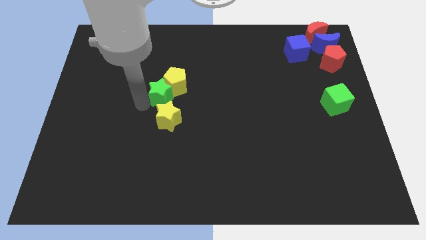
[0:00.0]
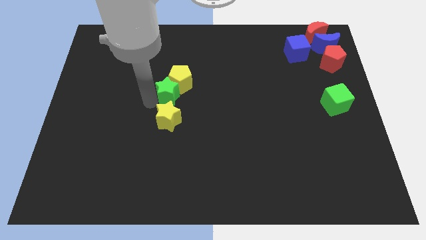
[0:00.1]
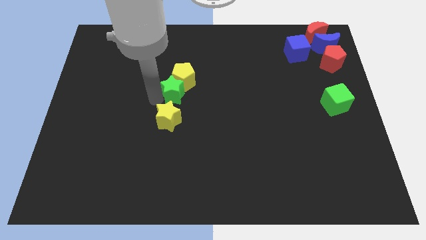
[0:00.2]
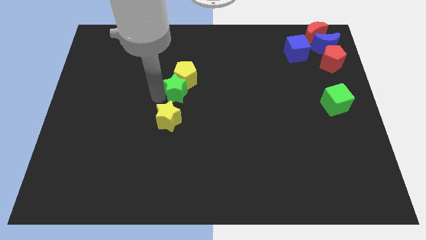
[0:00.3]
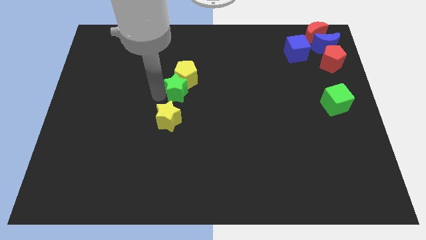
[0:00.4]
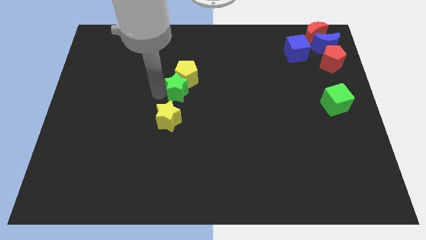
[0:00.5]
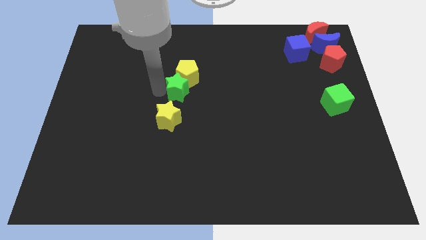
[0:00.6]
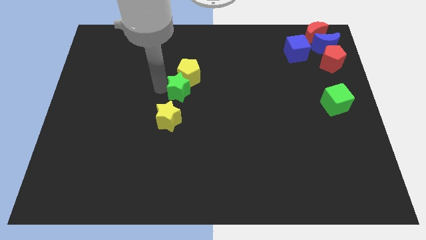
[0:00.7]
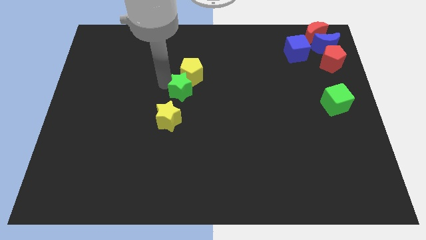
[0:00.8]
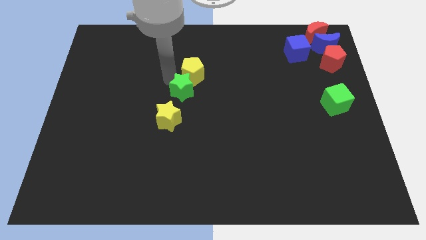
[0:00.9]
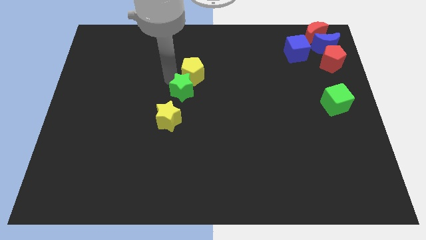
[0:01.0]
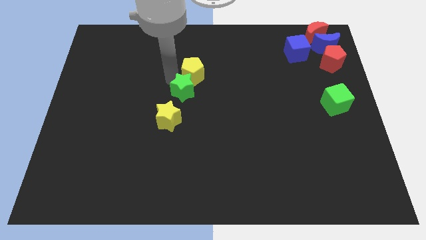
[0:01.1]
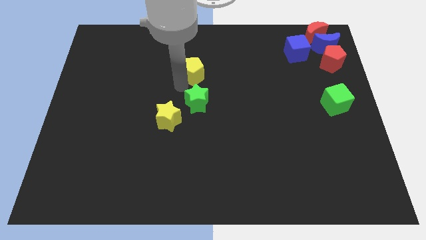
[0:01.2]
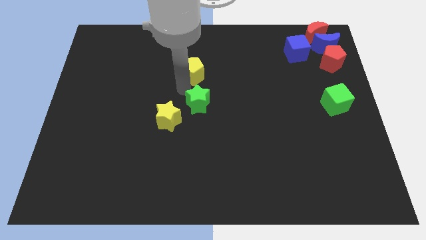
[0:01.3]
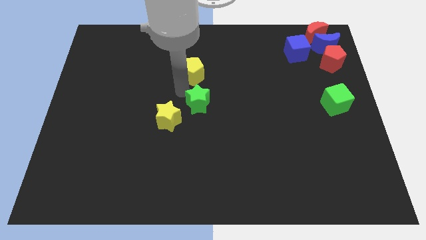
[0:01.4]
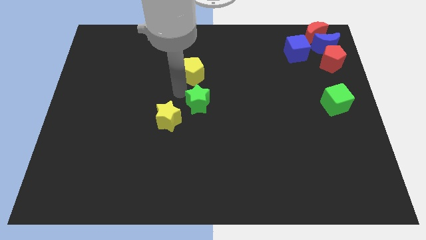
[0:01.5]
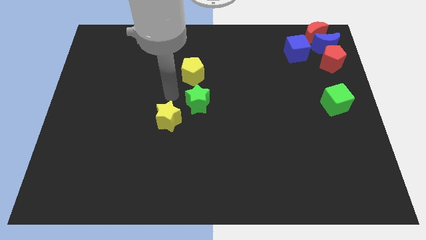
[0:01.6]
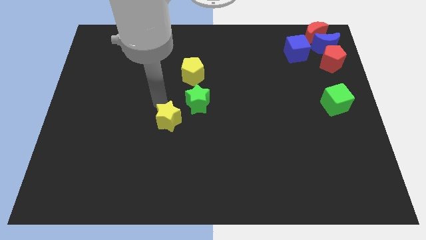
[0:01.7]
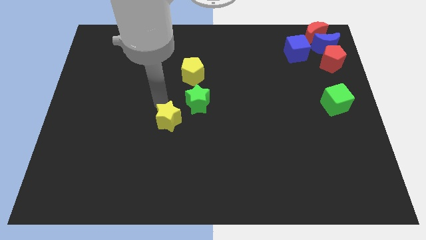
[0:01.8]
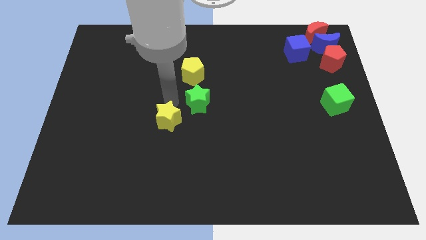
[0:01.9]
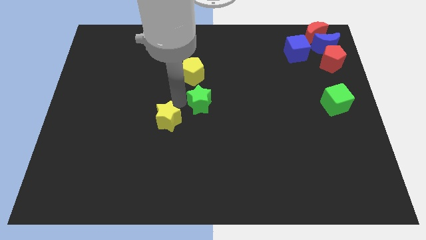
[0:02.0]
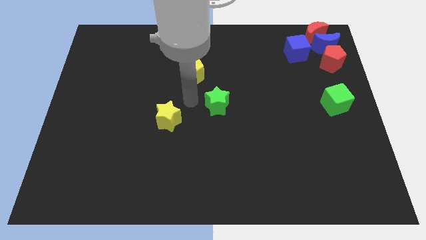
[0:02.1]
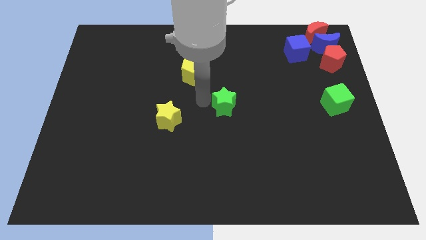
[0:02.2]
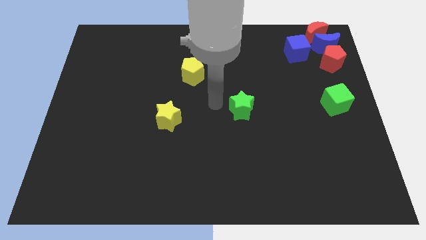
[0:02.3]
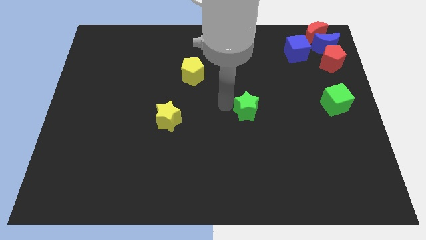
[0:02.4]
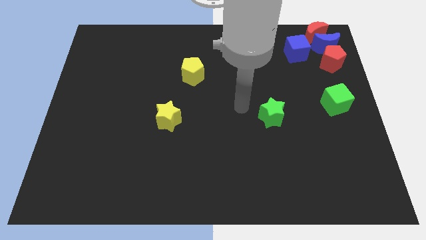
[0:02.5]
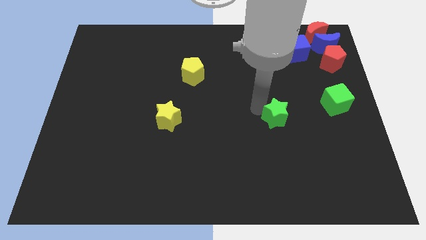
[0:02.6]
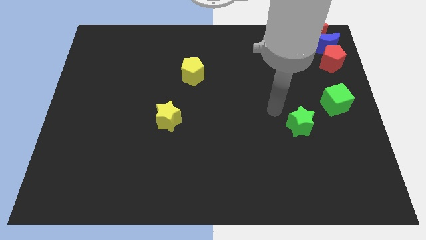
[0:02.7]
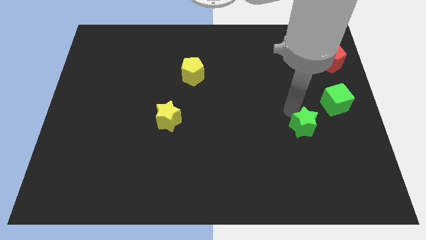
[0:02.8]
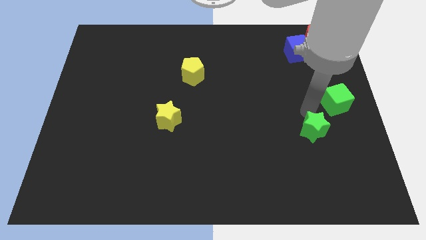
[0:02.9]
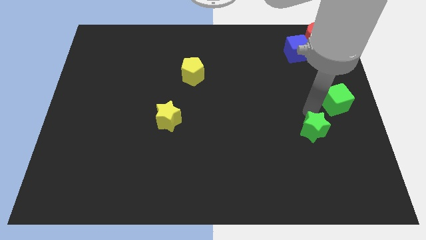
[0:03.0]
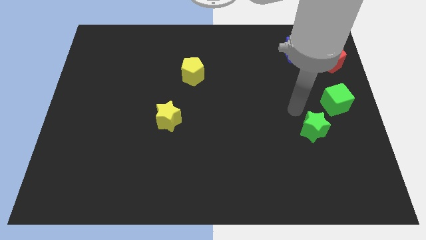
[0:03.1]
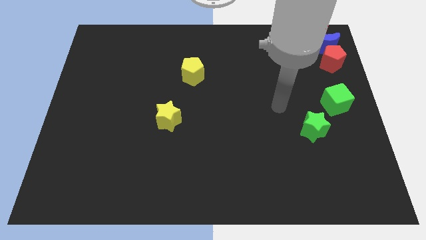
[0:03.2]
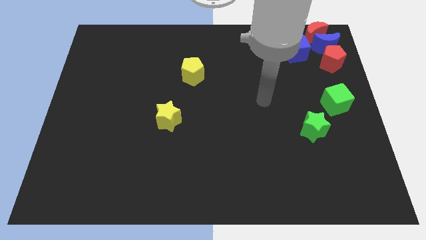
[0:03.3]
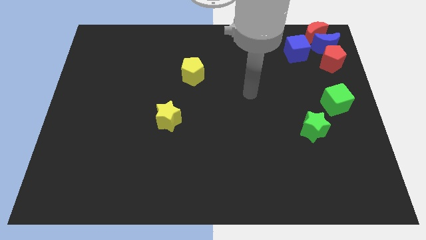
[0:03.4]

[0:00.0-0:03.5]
push the green star to the bottom left of the green cube

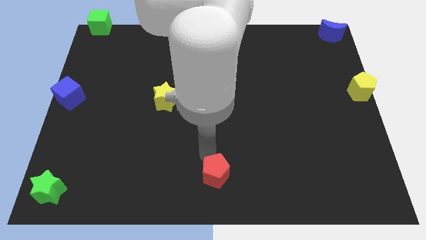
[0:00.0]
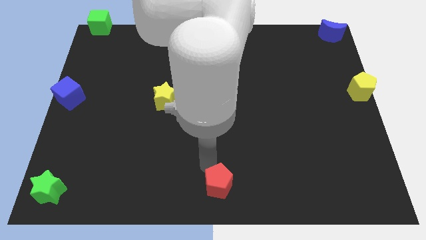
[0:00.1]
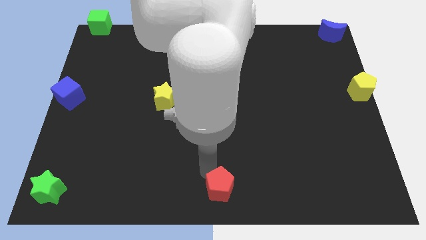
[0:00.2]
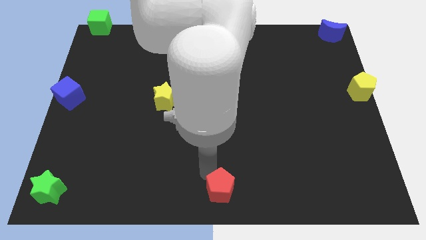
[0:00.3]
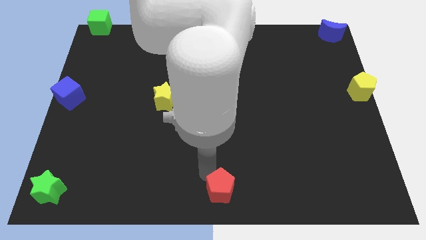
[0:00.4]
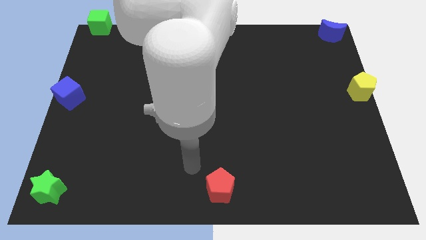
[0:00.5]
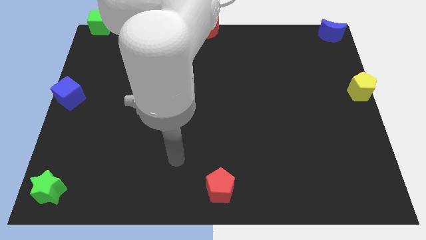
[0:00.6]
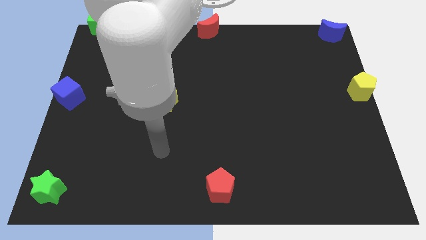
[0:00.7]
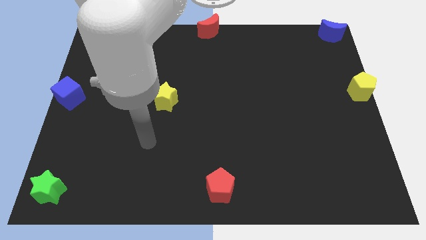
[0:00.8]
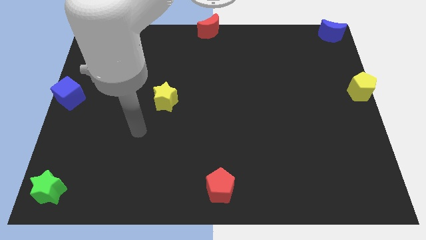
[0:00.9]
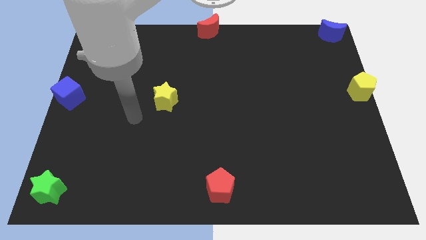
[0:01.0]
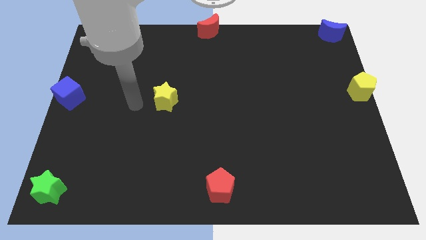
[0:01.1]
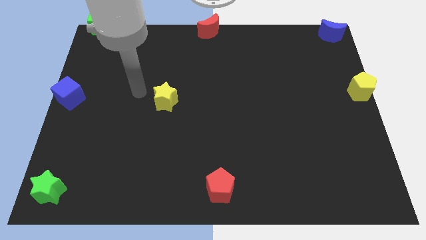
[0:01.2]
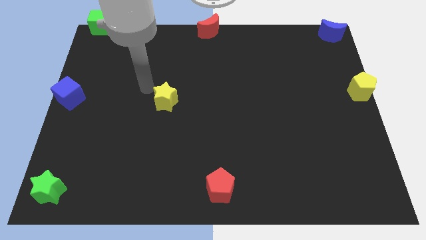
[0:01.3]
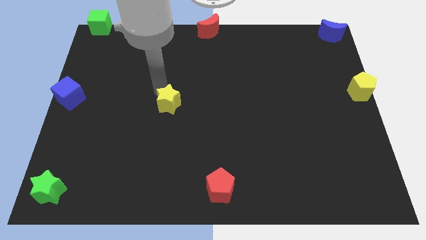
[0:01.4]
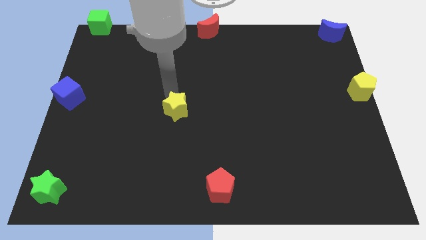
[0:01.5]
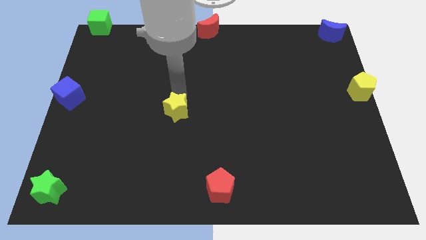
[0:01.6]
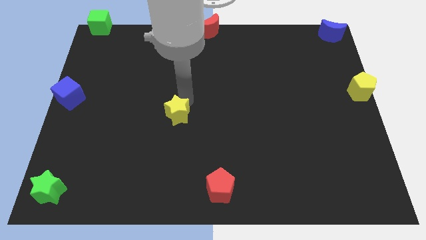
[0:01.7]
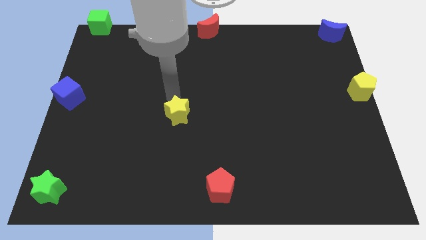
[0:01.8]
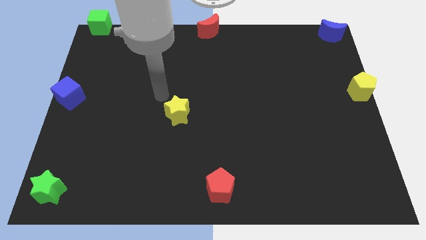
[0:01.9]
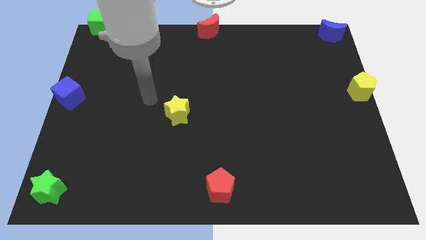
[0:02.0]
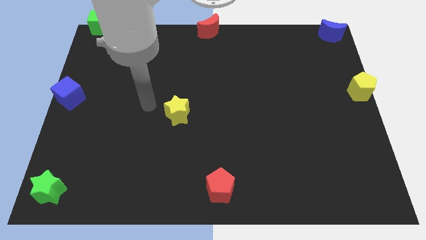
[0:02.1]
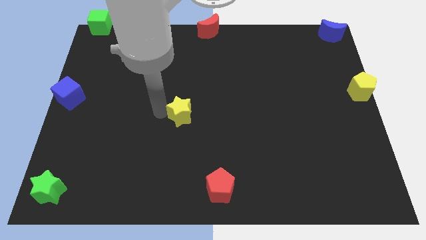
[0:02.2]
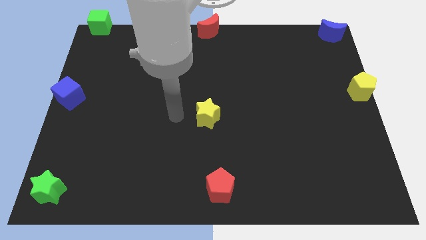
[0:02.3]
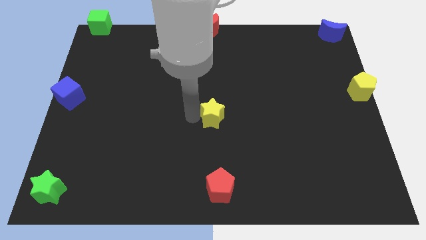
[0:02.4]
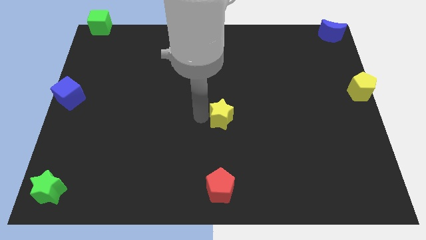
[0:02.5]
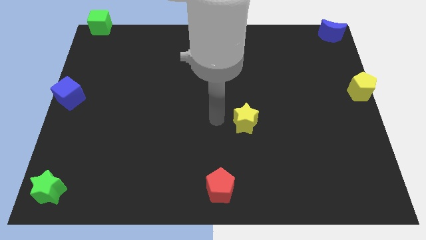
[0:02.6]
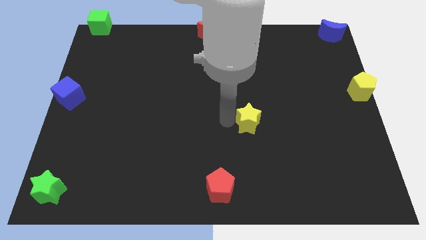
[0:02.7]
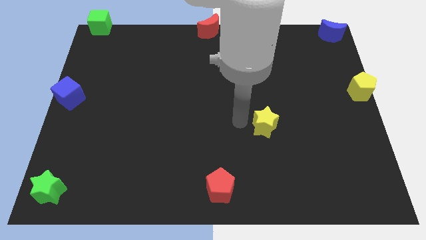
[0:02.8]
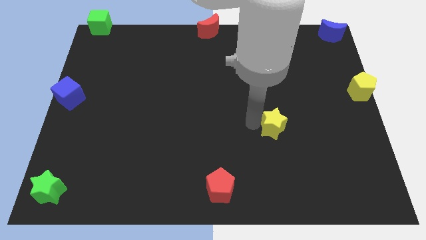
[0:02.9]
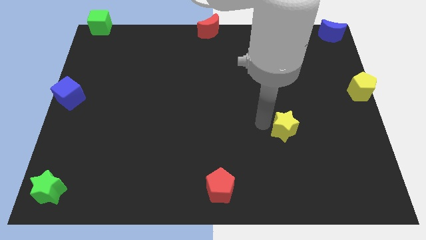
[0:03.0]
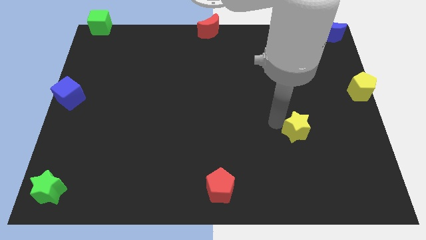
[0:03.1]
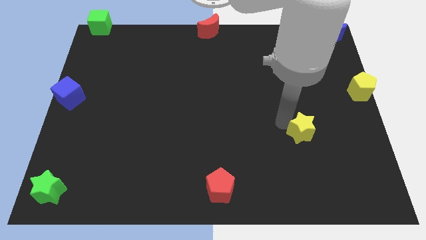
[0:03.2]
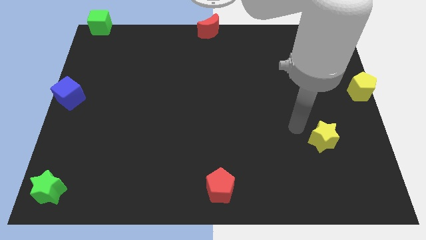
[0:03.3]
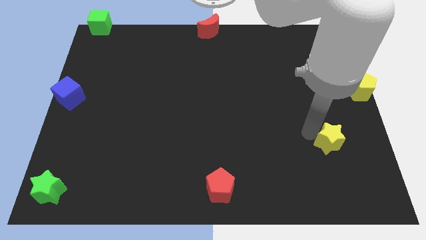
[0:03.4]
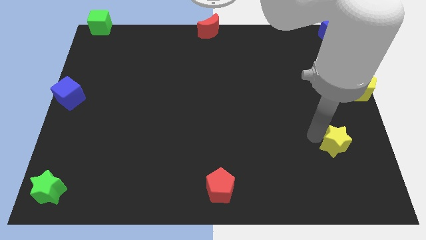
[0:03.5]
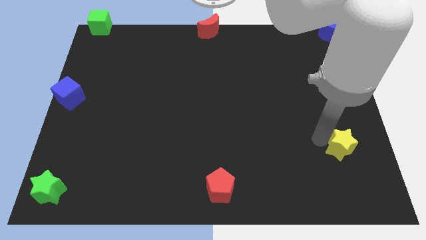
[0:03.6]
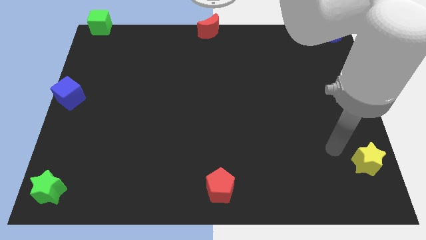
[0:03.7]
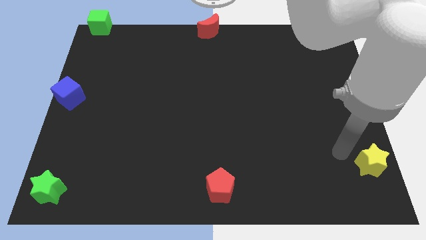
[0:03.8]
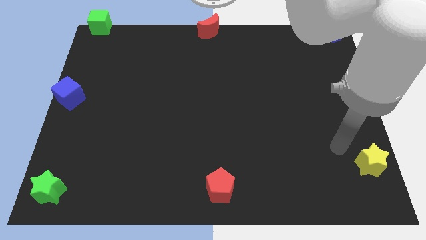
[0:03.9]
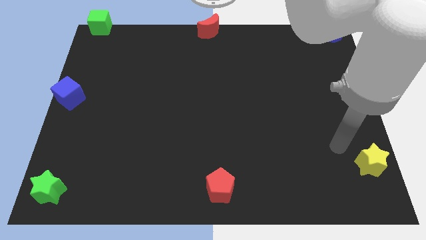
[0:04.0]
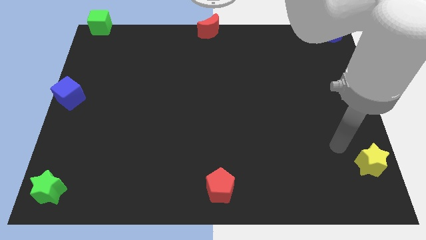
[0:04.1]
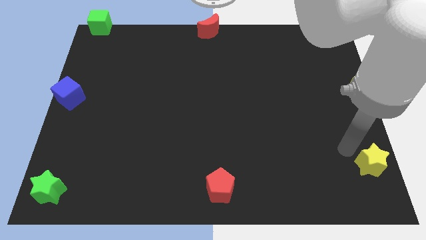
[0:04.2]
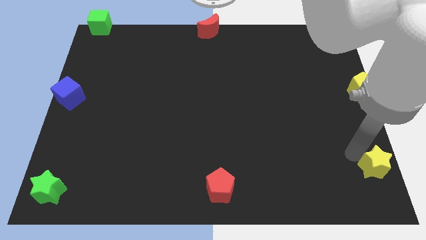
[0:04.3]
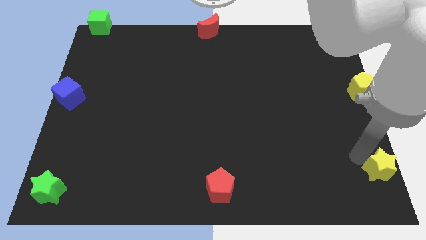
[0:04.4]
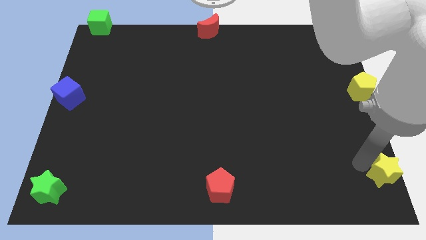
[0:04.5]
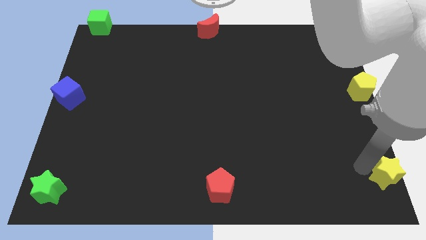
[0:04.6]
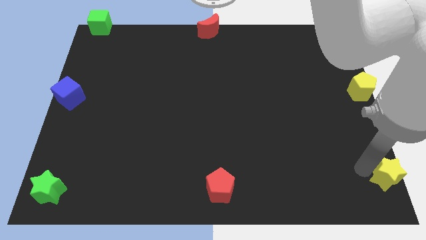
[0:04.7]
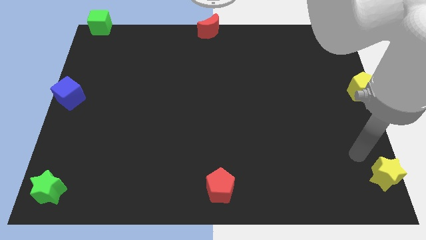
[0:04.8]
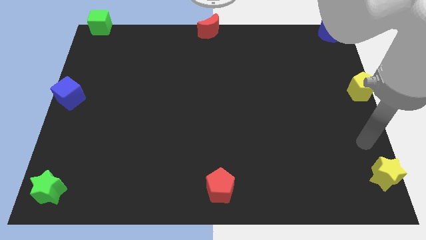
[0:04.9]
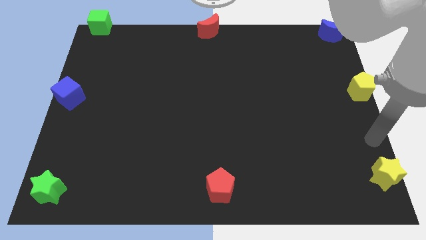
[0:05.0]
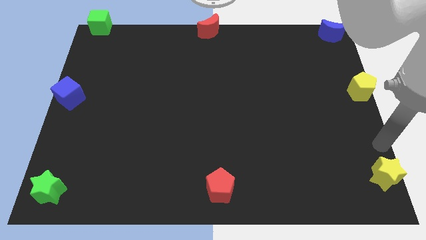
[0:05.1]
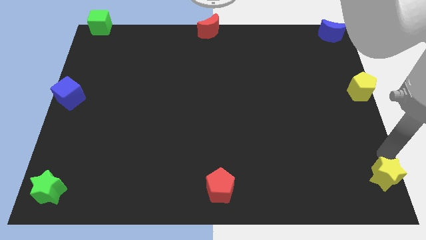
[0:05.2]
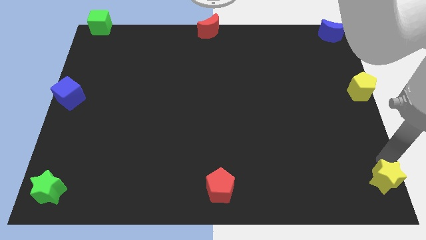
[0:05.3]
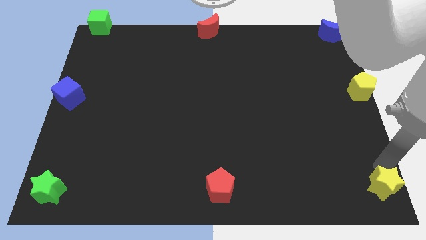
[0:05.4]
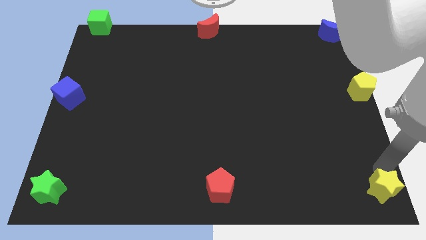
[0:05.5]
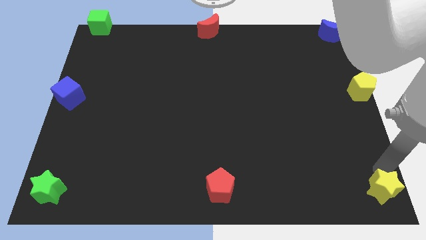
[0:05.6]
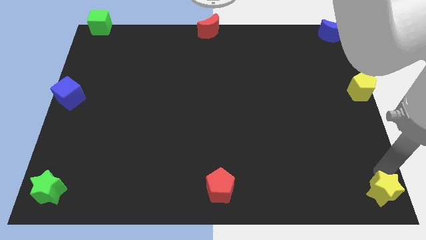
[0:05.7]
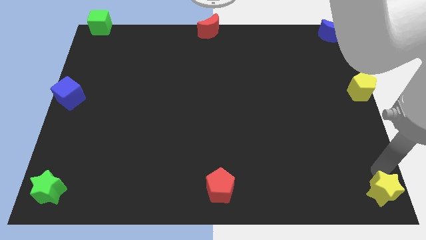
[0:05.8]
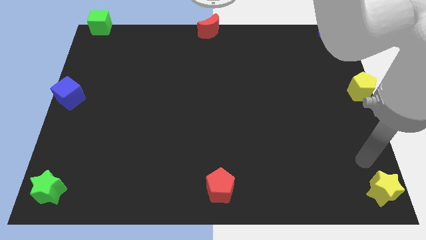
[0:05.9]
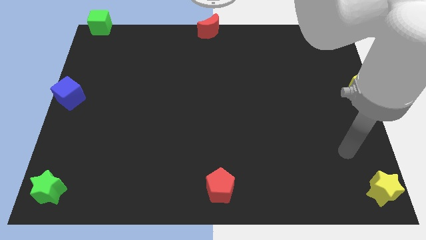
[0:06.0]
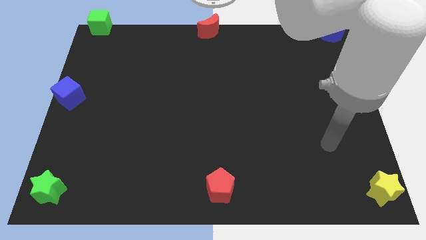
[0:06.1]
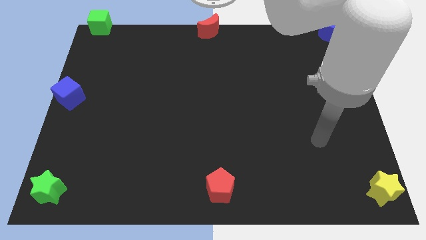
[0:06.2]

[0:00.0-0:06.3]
place the yellow star at the bottom right corner of the board
